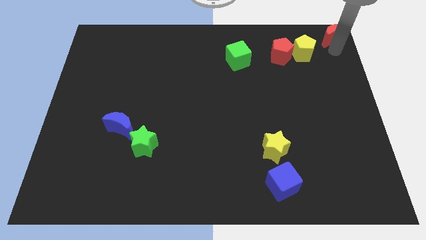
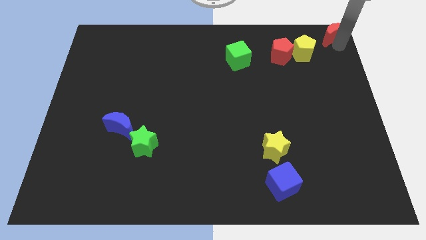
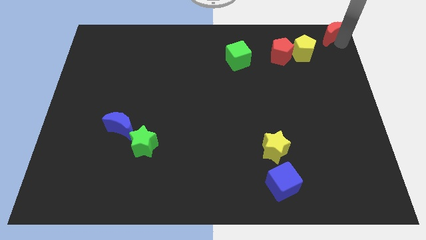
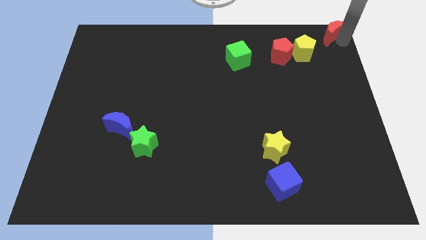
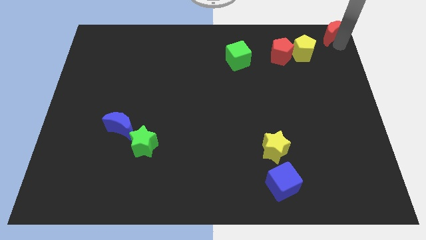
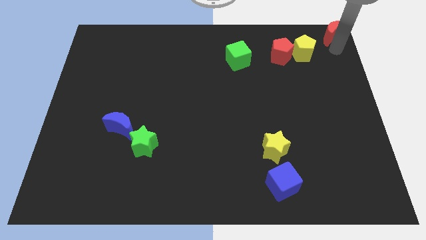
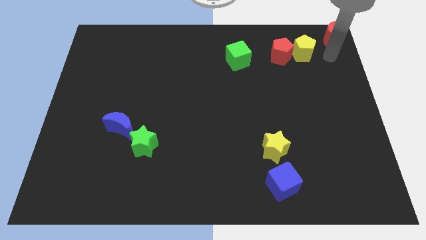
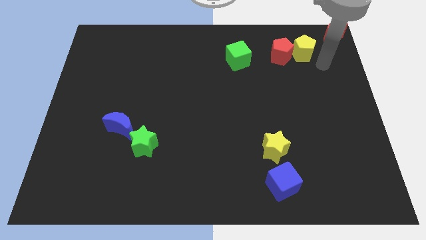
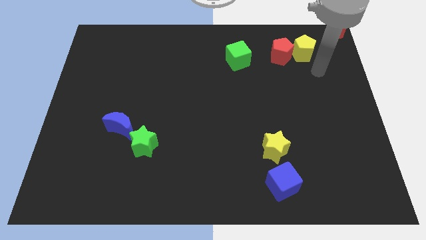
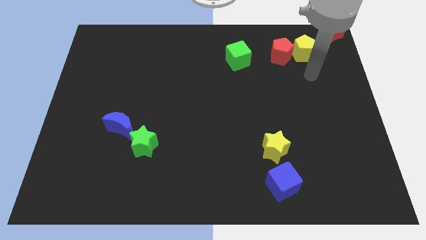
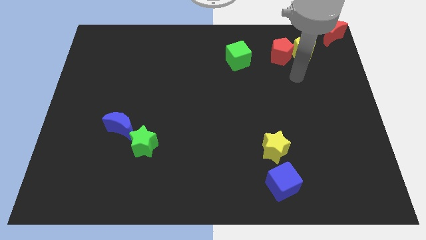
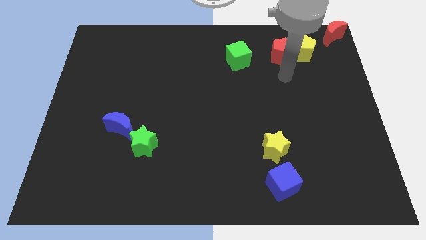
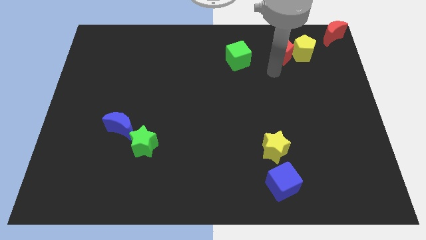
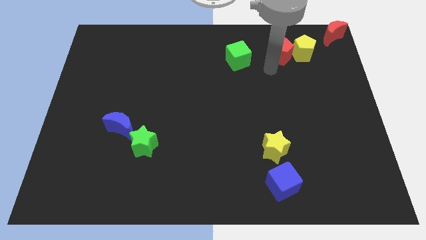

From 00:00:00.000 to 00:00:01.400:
move the arm towards the red pentagon

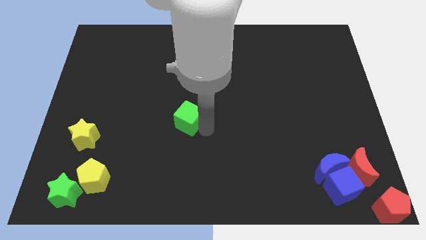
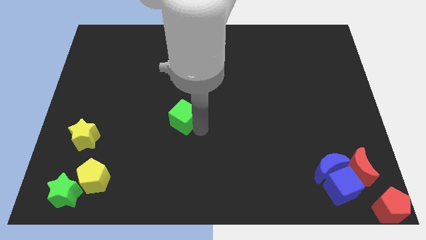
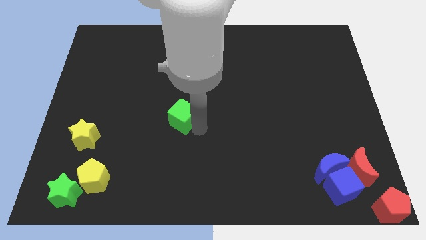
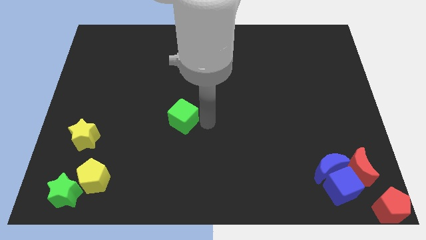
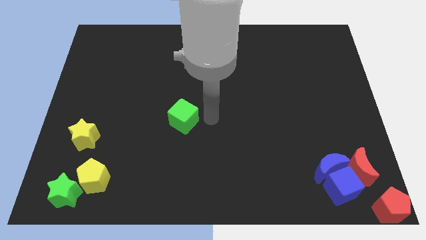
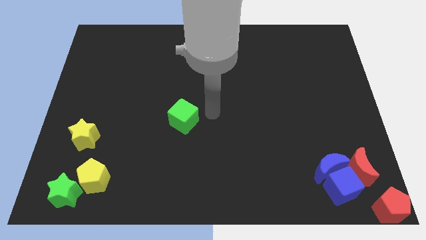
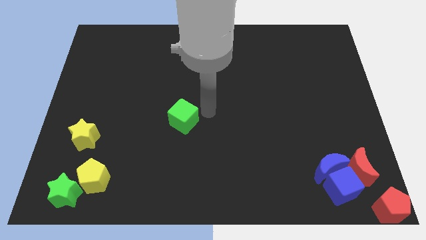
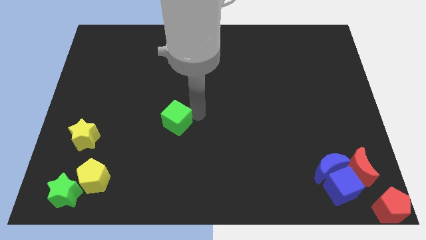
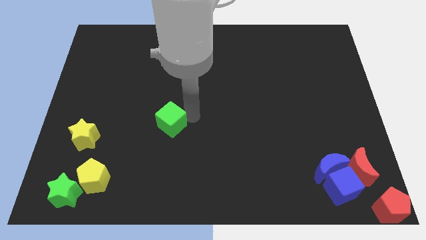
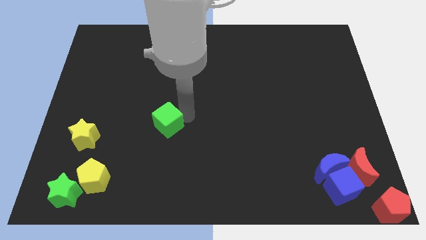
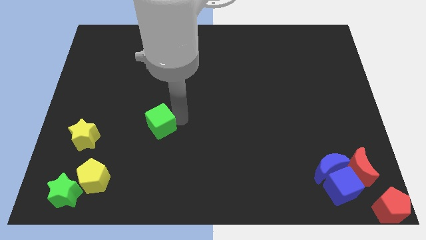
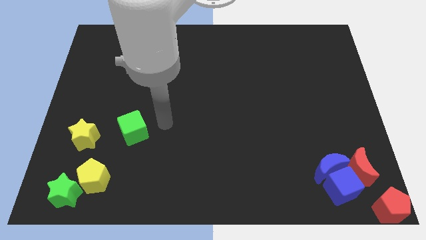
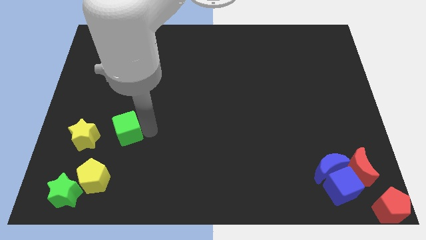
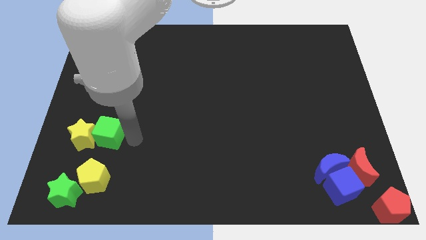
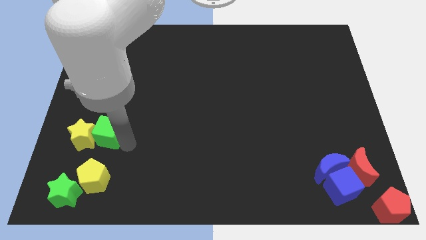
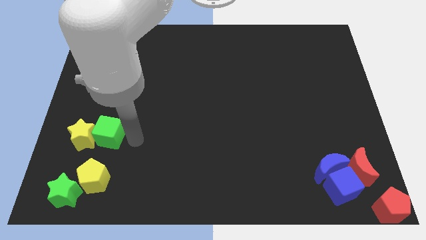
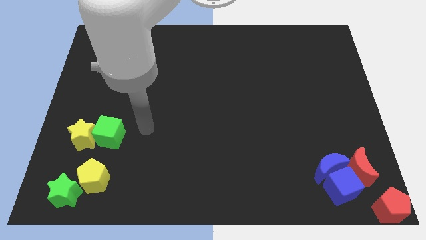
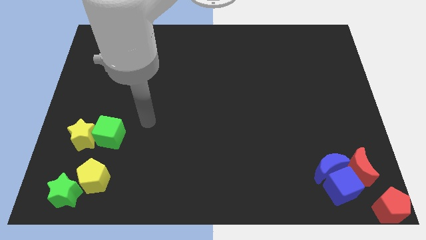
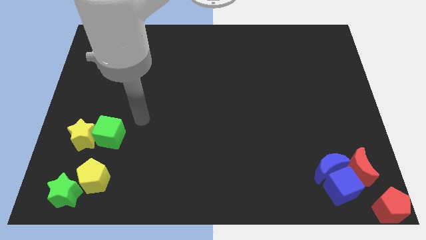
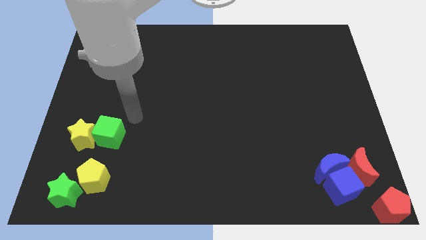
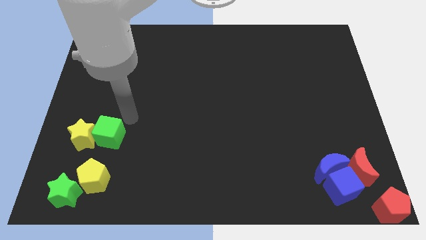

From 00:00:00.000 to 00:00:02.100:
move green cube into yellow star

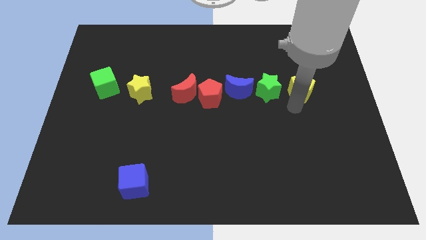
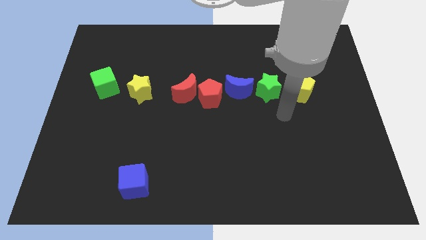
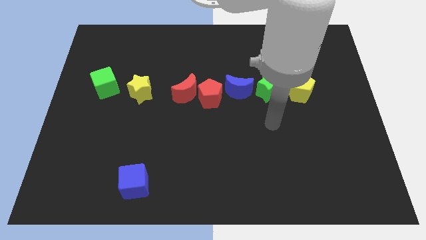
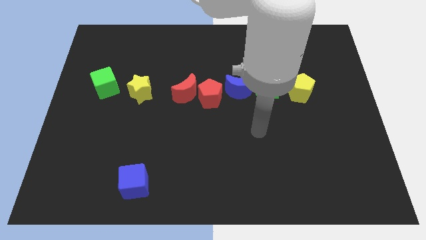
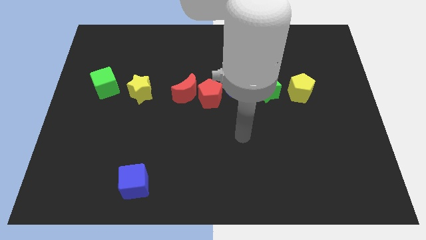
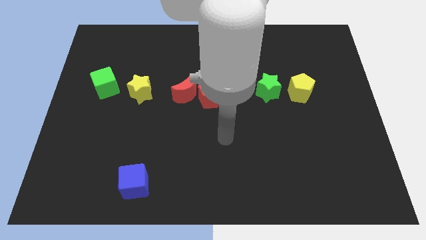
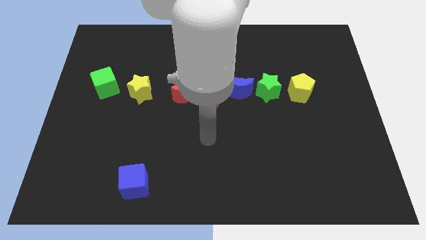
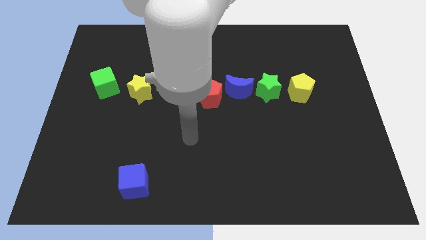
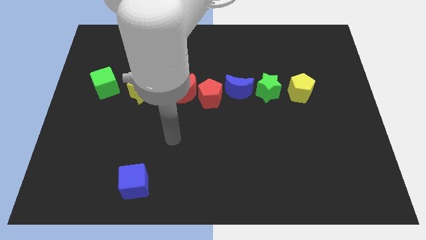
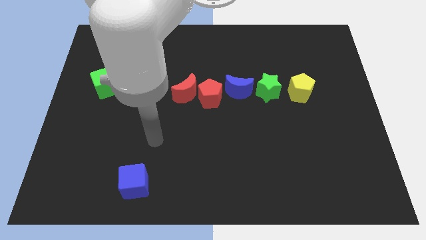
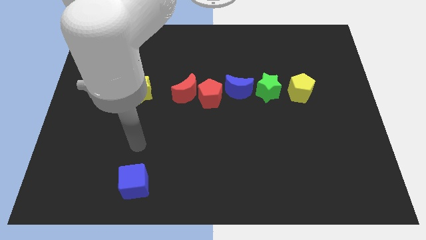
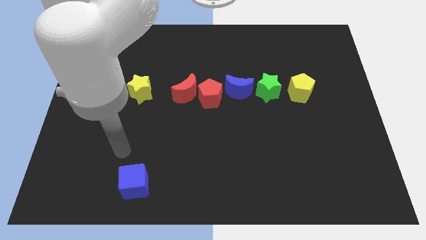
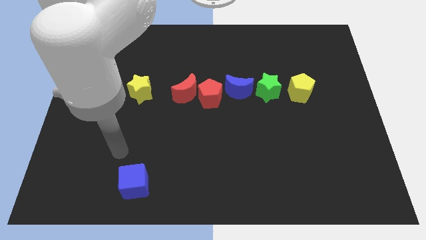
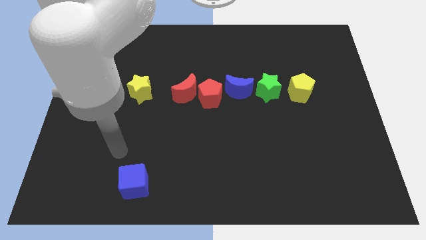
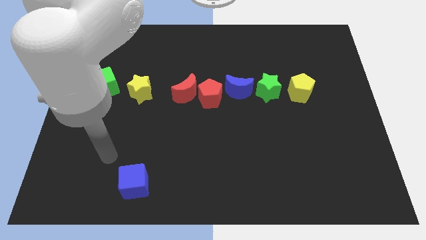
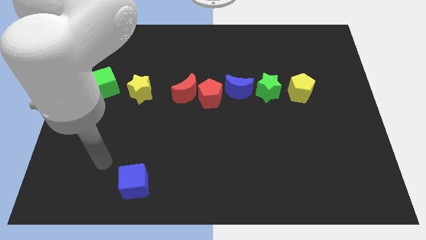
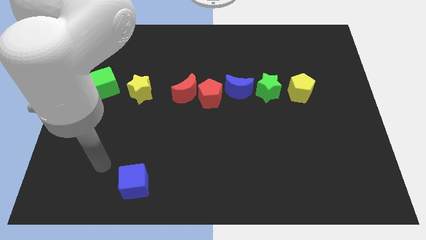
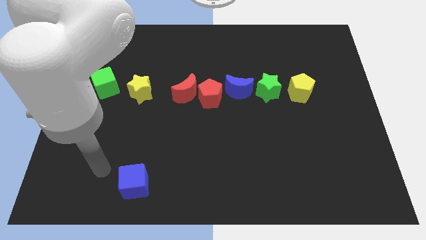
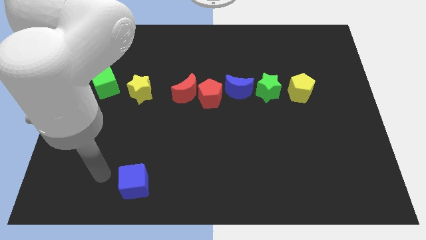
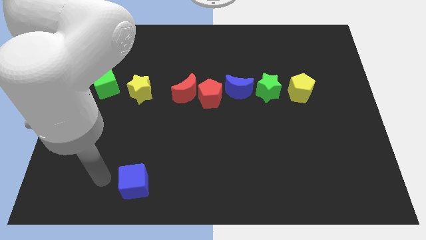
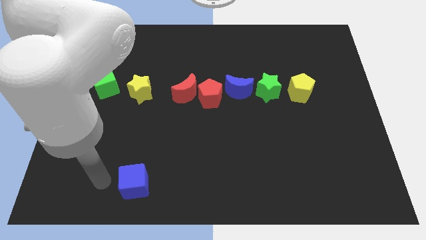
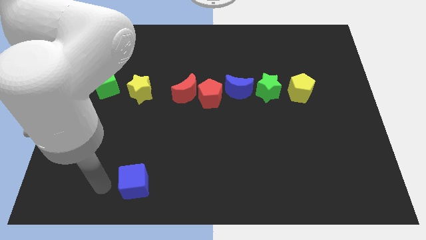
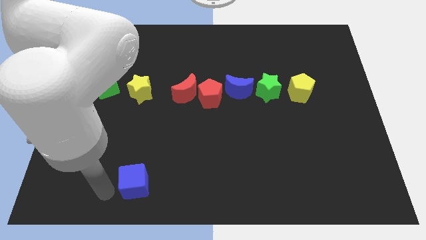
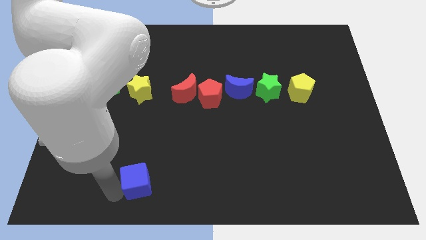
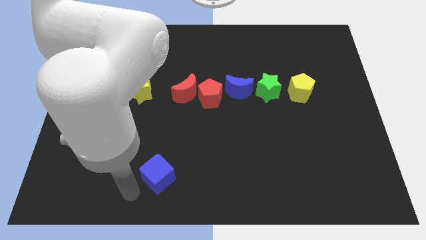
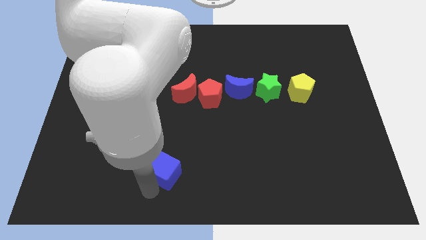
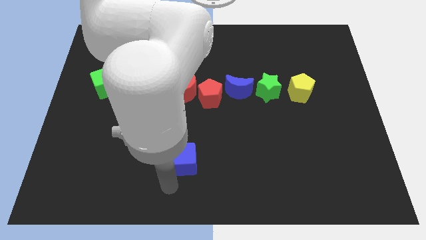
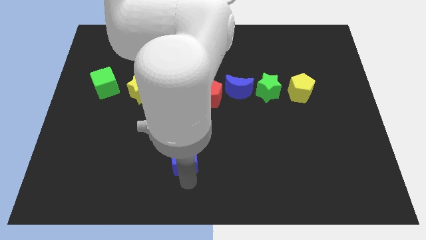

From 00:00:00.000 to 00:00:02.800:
slightly push the blue cube towards the top side of the board

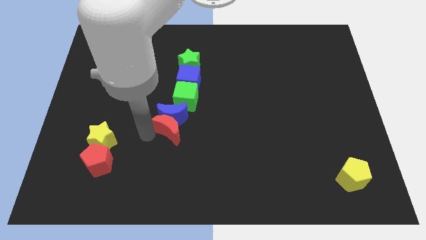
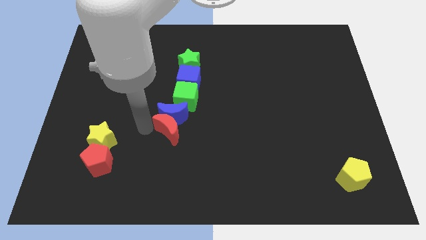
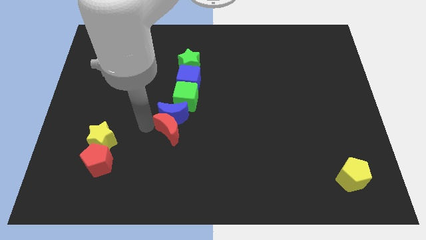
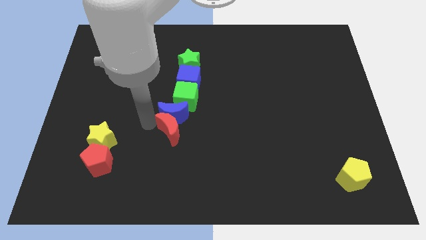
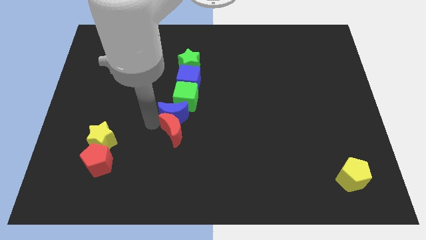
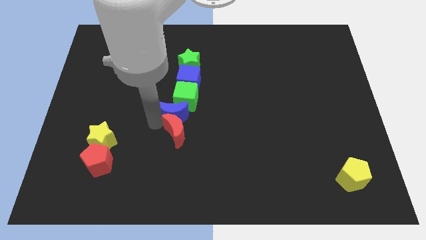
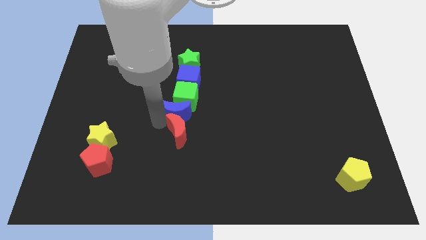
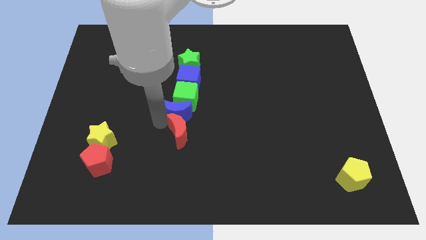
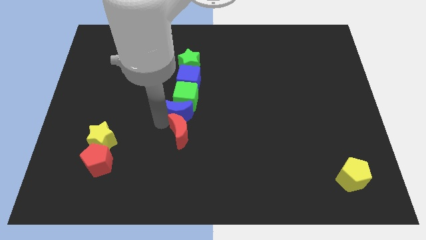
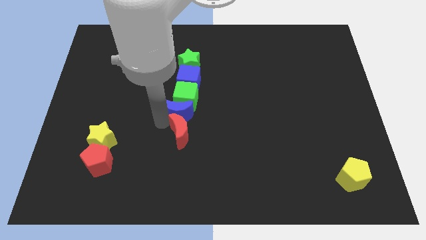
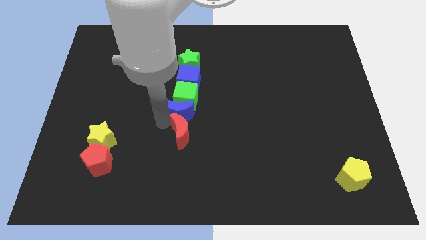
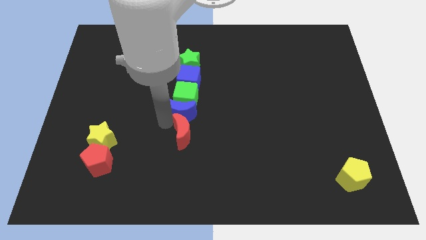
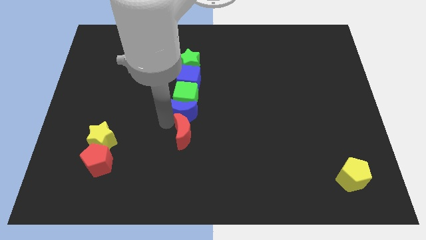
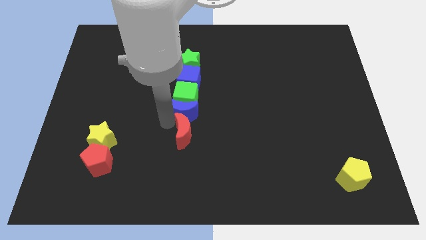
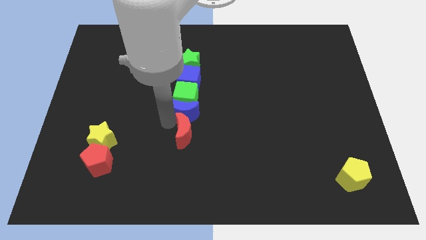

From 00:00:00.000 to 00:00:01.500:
push the blue moon and red moon to the bottom of the green cube

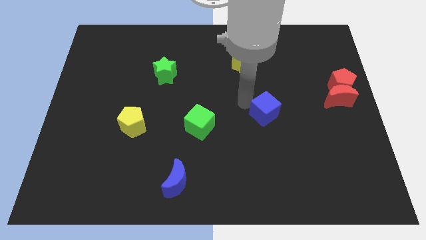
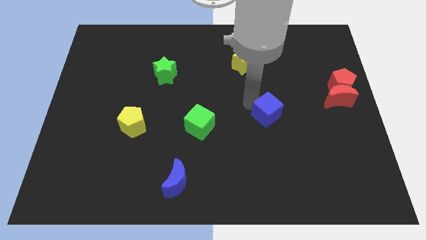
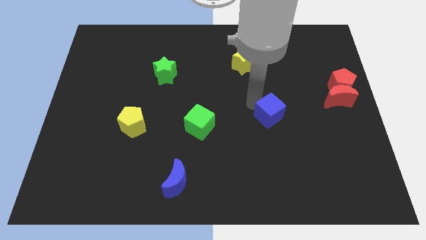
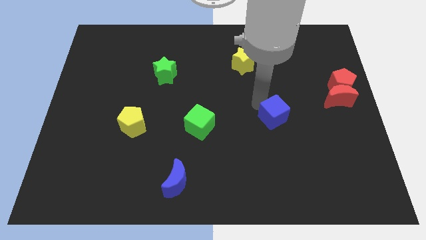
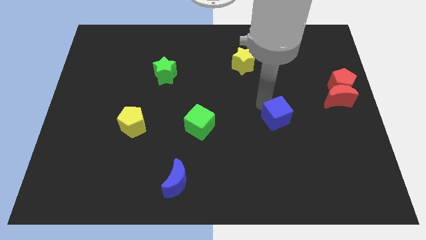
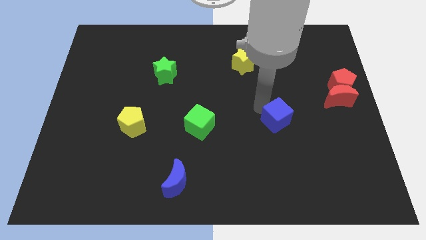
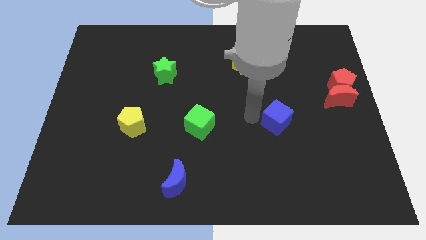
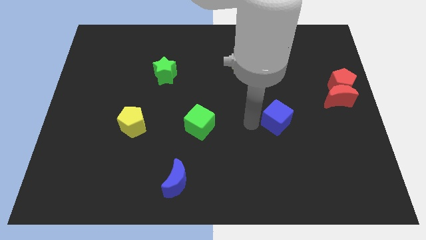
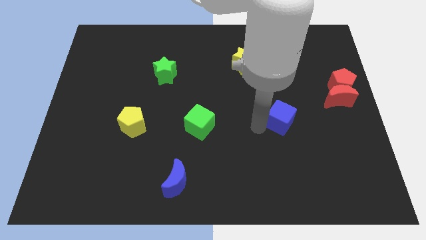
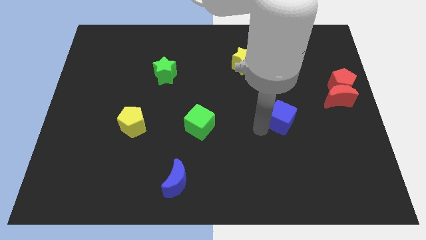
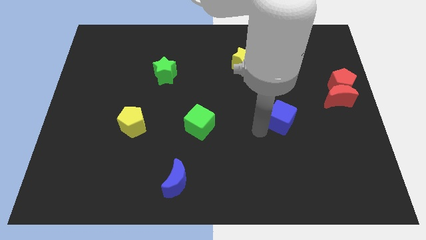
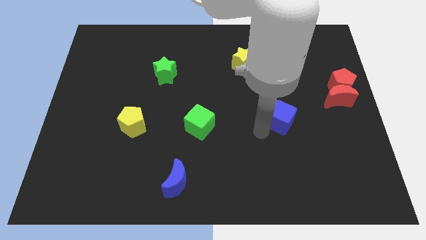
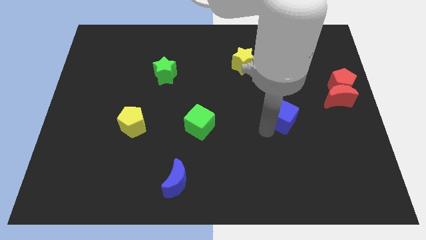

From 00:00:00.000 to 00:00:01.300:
push the blue cube to the right of the green star
